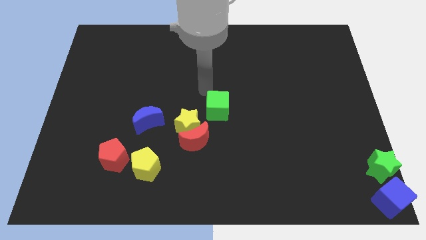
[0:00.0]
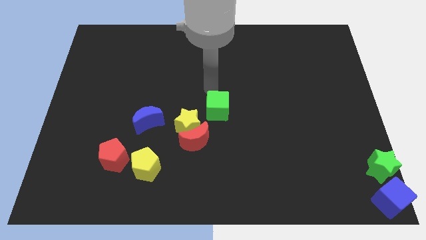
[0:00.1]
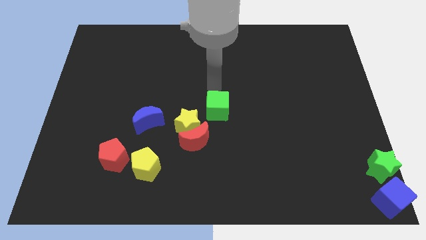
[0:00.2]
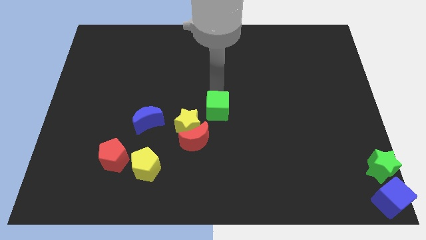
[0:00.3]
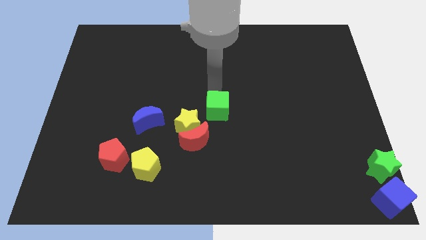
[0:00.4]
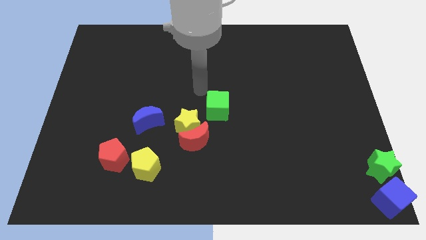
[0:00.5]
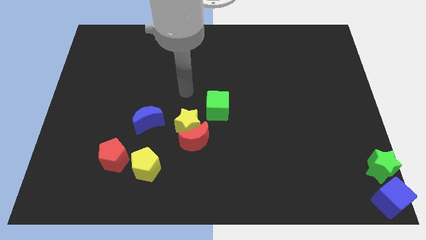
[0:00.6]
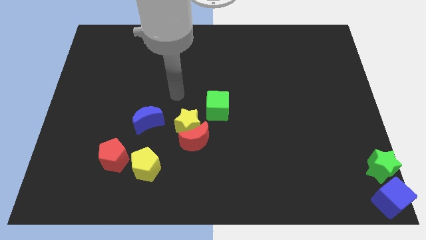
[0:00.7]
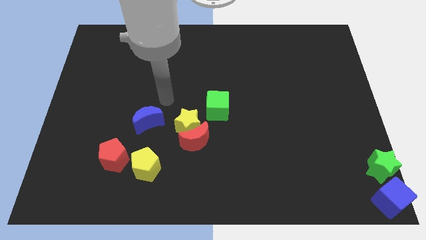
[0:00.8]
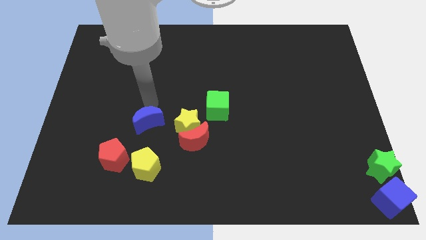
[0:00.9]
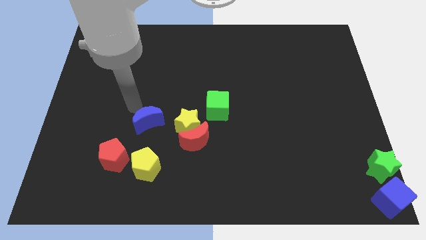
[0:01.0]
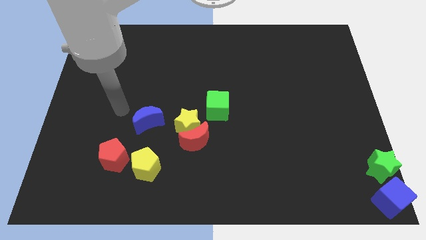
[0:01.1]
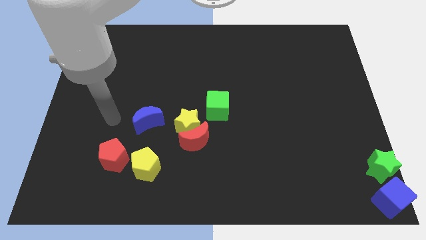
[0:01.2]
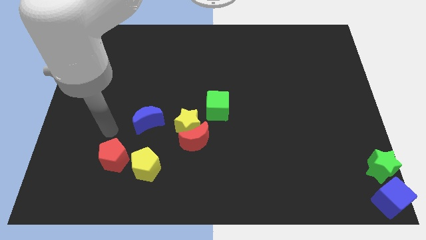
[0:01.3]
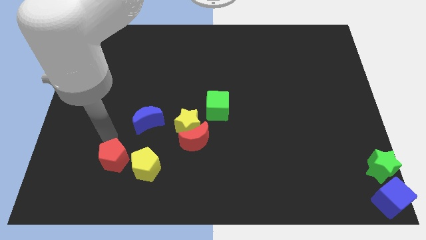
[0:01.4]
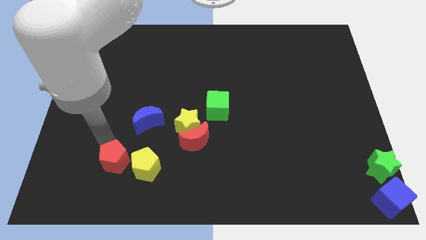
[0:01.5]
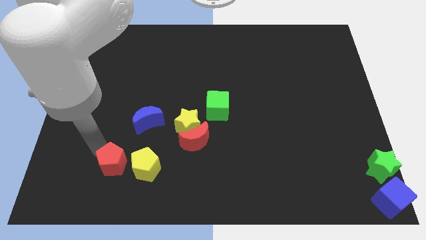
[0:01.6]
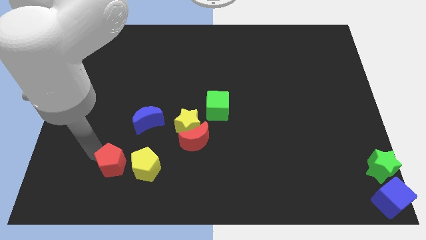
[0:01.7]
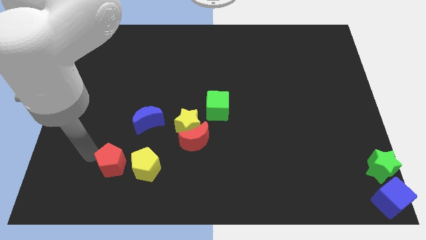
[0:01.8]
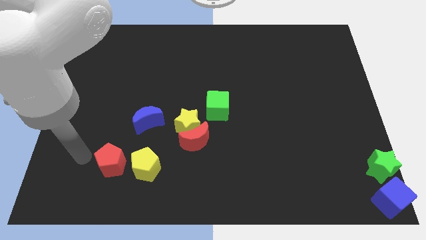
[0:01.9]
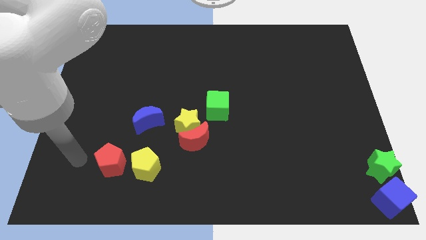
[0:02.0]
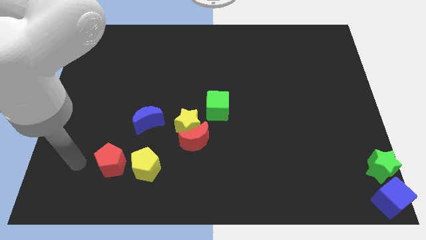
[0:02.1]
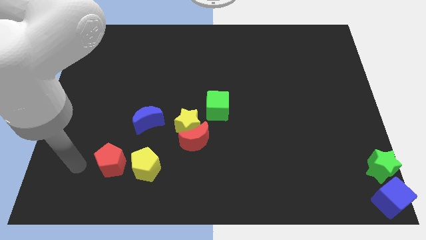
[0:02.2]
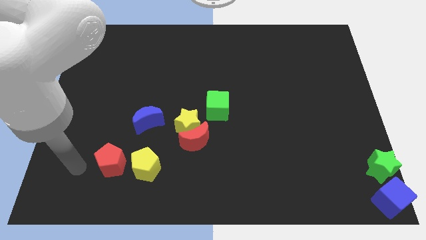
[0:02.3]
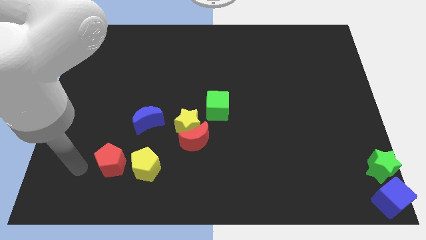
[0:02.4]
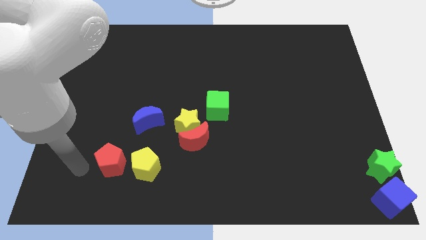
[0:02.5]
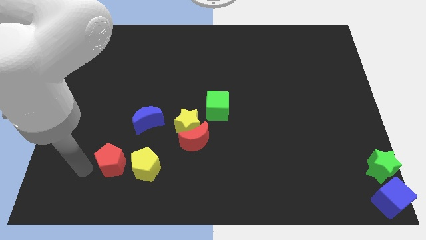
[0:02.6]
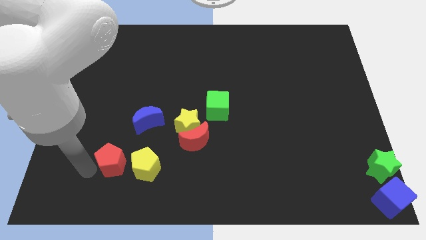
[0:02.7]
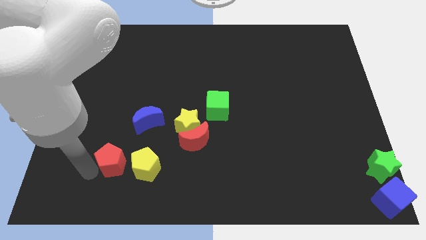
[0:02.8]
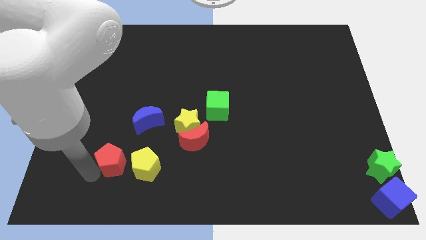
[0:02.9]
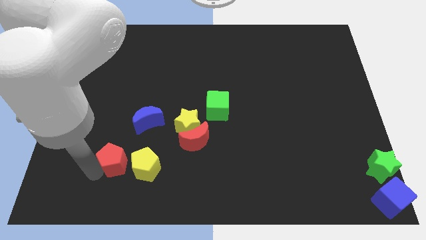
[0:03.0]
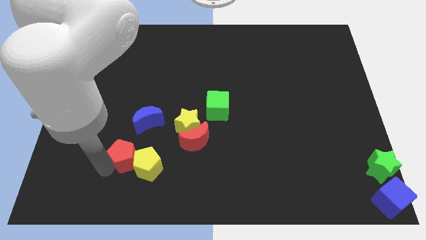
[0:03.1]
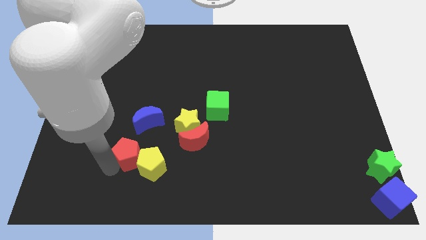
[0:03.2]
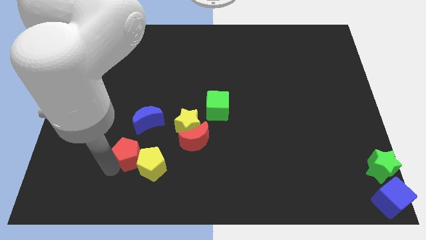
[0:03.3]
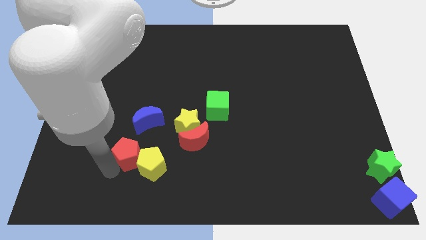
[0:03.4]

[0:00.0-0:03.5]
group up the red pentagon and yellow pentagon at the bottom left side of the board

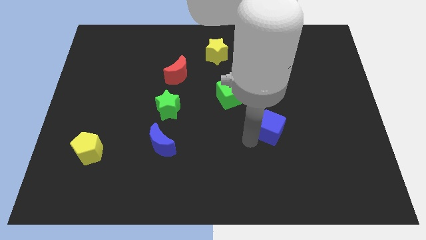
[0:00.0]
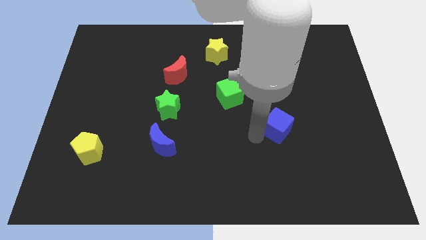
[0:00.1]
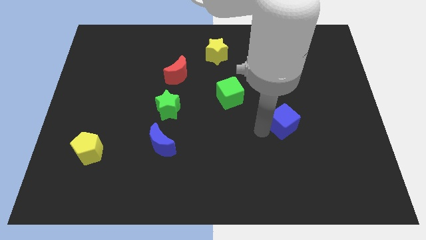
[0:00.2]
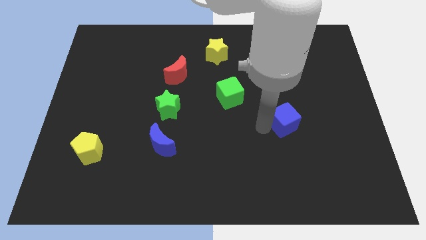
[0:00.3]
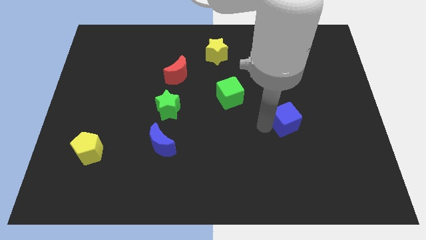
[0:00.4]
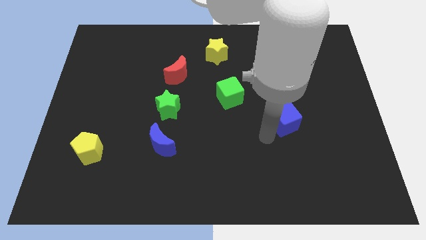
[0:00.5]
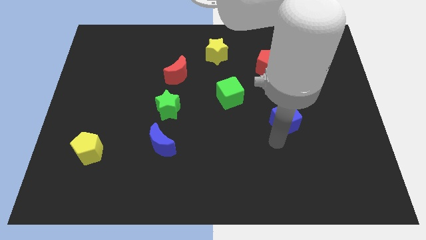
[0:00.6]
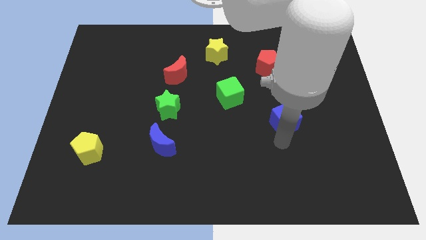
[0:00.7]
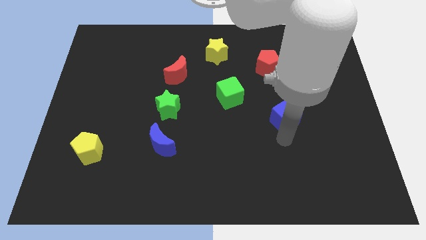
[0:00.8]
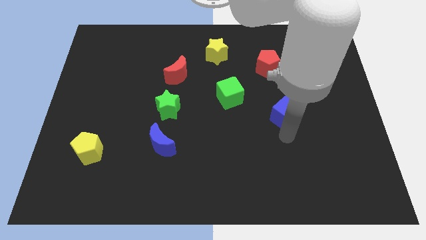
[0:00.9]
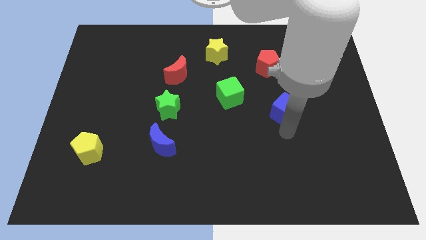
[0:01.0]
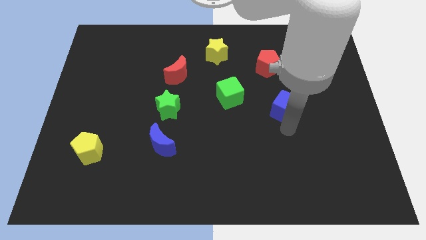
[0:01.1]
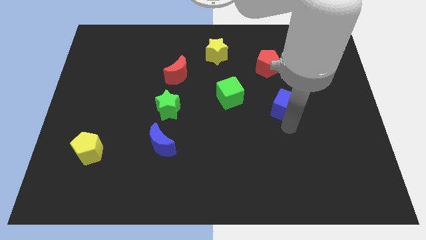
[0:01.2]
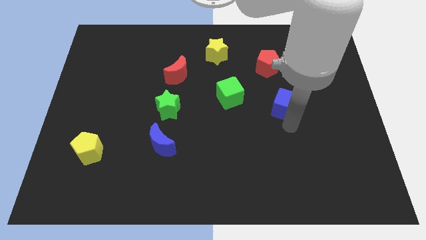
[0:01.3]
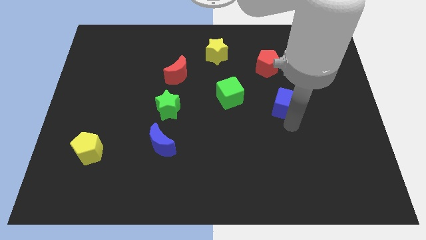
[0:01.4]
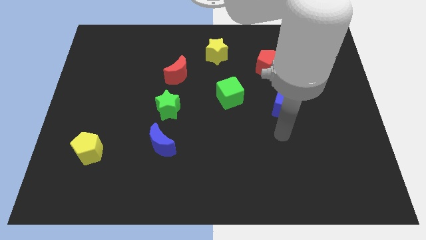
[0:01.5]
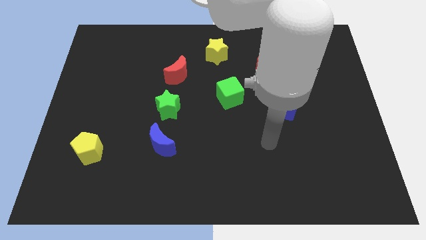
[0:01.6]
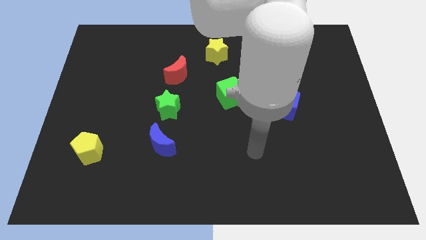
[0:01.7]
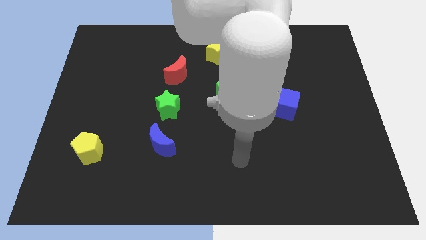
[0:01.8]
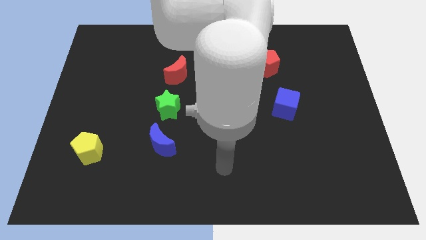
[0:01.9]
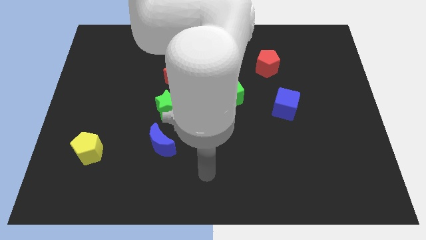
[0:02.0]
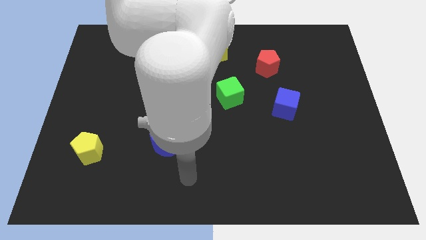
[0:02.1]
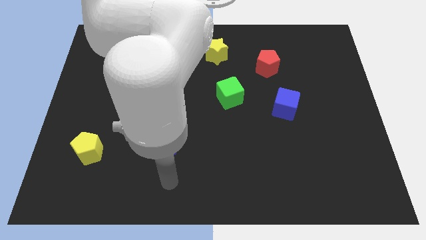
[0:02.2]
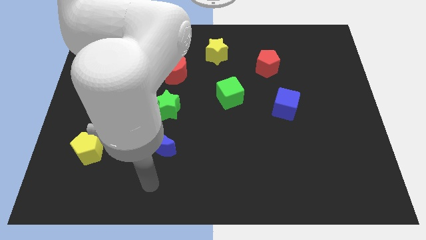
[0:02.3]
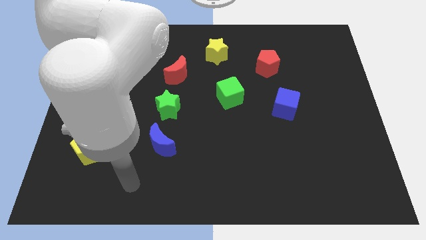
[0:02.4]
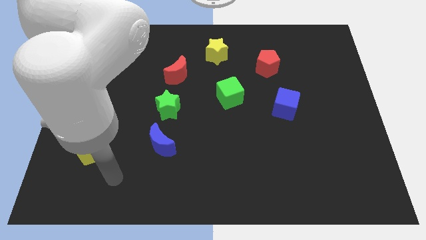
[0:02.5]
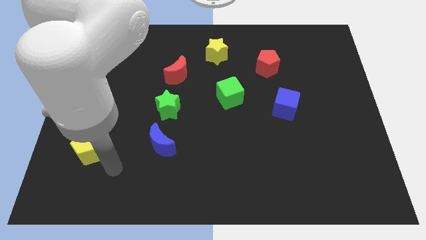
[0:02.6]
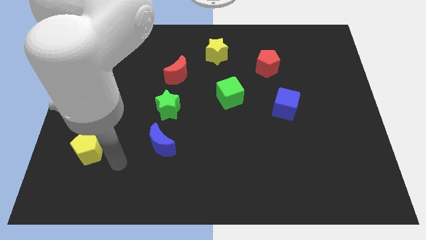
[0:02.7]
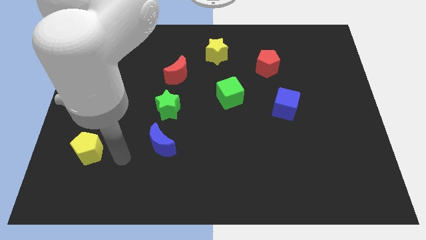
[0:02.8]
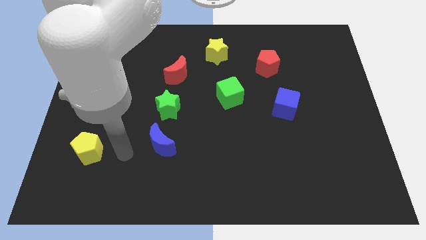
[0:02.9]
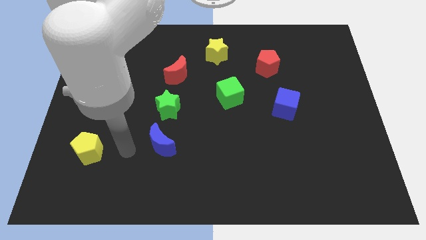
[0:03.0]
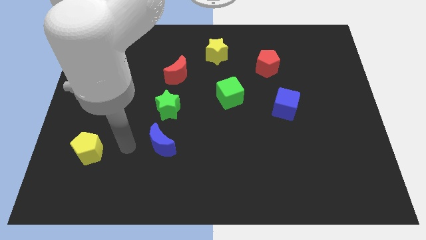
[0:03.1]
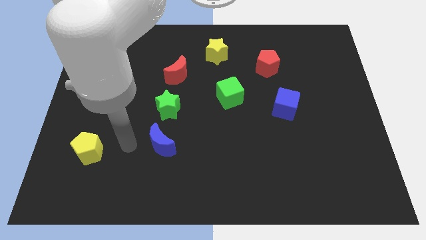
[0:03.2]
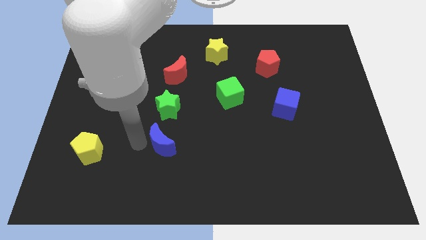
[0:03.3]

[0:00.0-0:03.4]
push the blue cube to the right side of the green cube

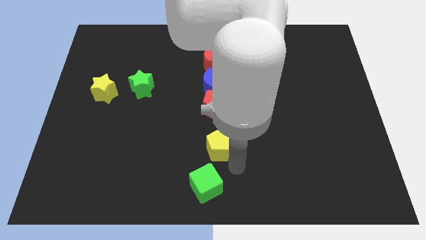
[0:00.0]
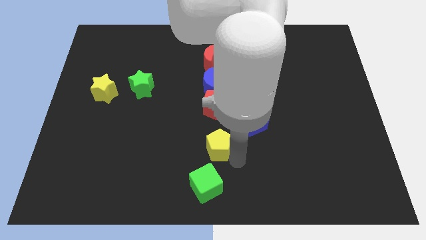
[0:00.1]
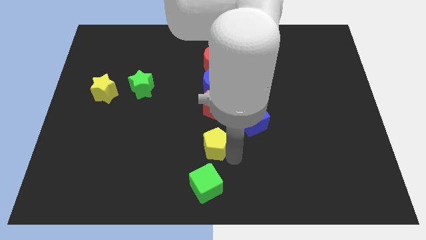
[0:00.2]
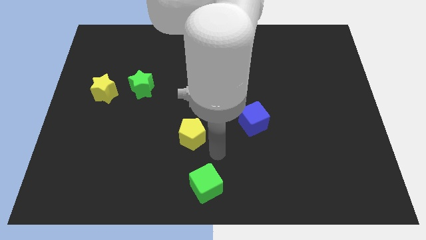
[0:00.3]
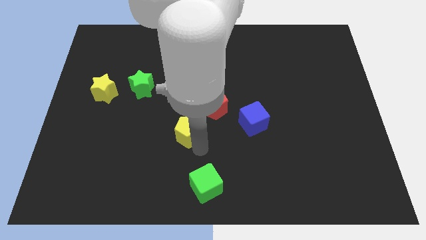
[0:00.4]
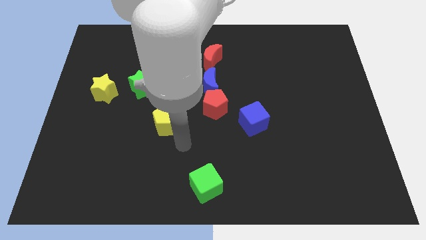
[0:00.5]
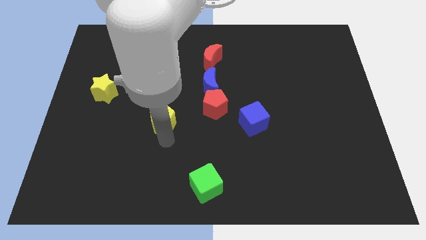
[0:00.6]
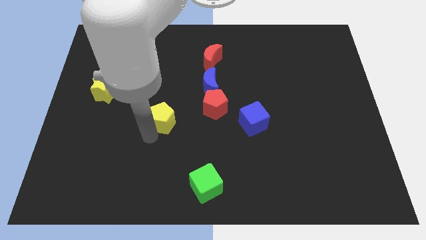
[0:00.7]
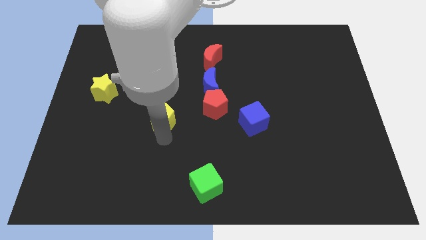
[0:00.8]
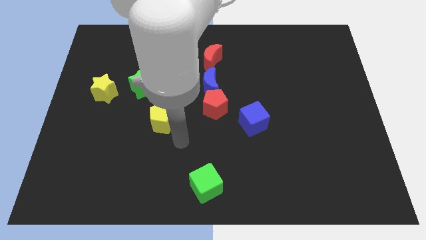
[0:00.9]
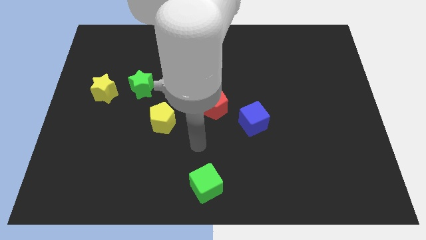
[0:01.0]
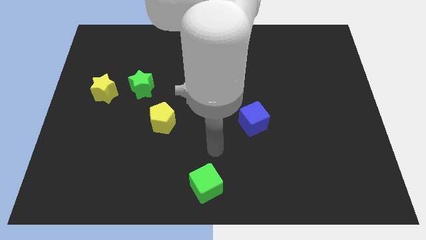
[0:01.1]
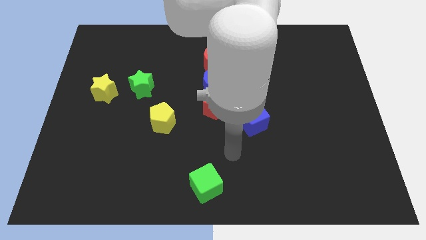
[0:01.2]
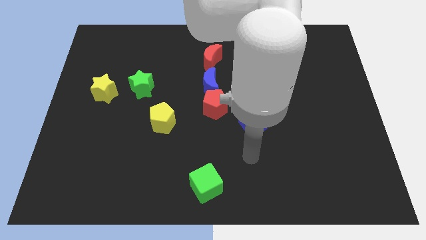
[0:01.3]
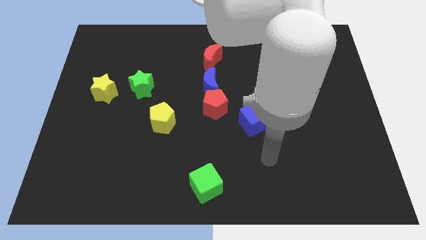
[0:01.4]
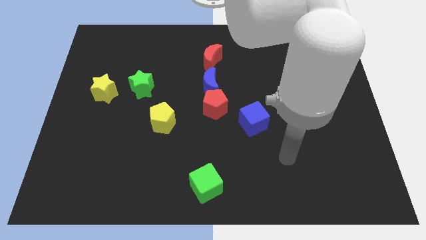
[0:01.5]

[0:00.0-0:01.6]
slide the yellow pentagon to the left of the blue cube

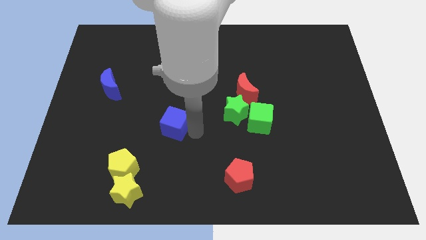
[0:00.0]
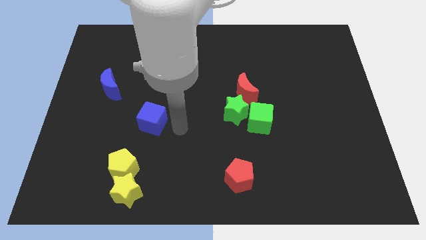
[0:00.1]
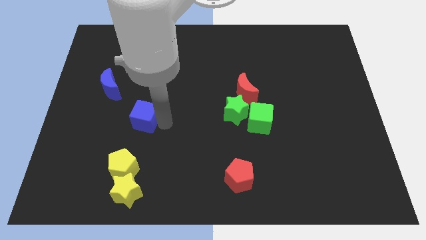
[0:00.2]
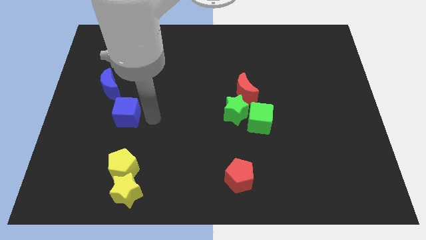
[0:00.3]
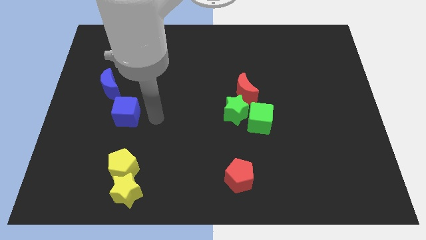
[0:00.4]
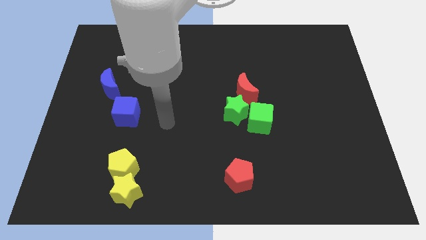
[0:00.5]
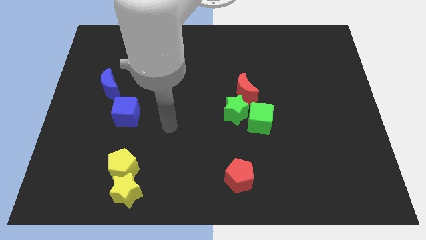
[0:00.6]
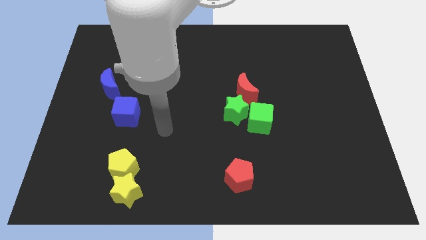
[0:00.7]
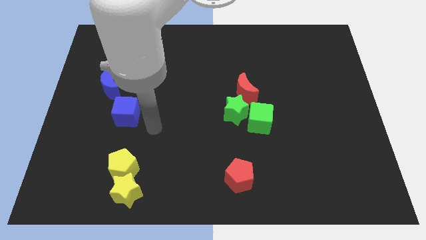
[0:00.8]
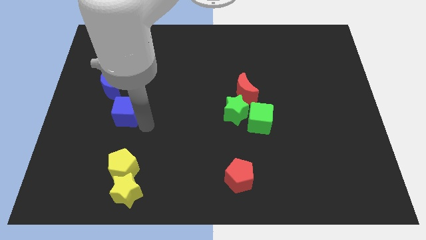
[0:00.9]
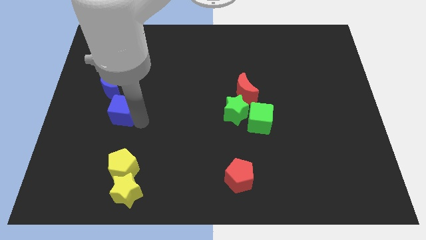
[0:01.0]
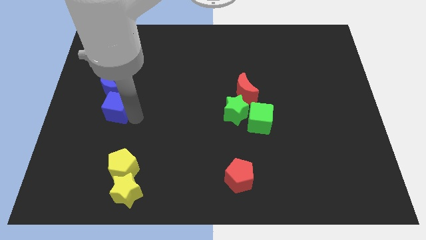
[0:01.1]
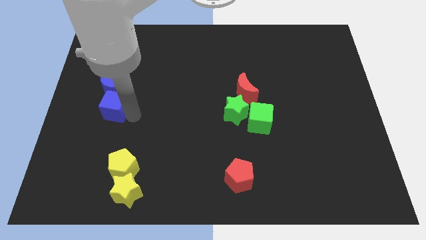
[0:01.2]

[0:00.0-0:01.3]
move the blue cube below the blue crescent
